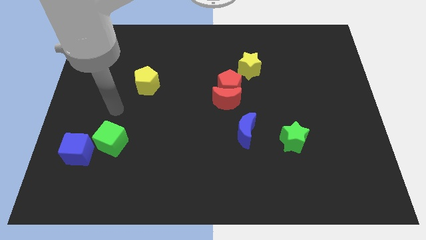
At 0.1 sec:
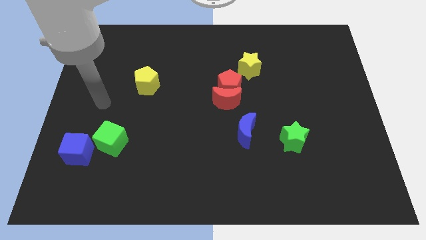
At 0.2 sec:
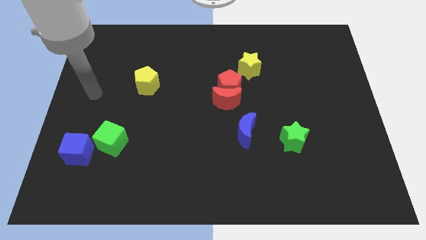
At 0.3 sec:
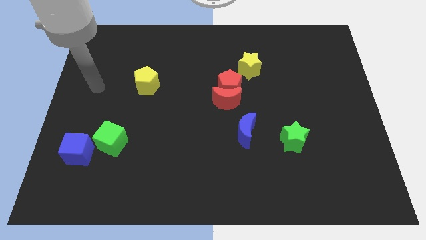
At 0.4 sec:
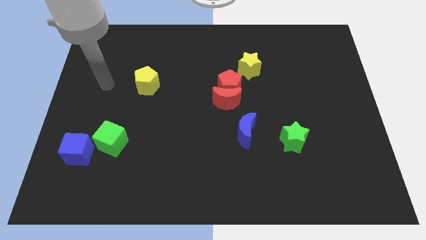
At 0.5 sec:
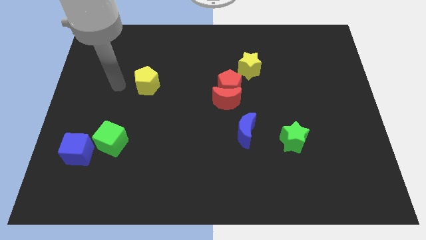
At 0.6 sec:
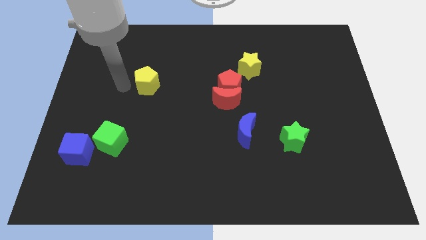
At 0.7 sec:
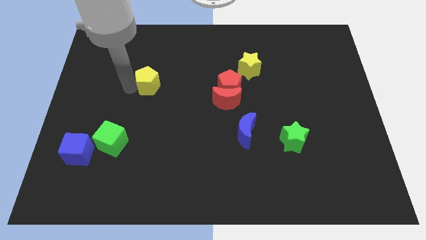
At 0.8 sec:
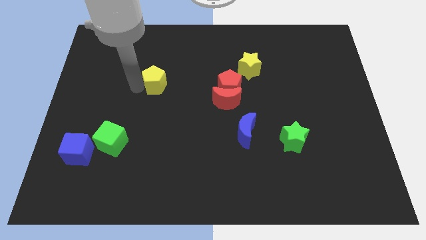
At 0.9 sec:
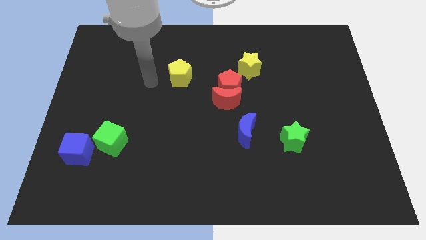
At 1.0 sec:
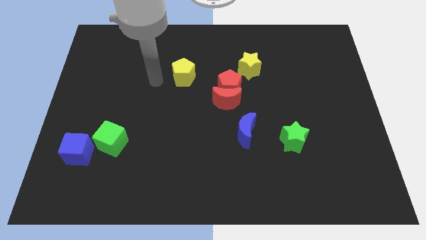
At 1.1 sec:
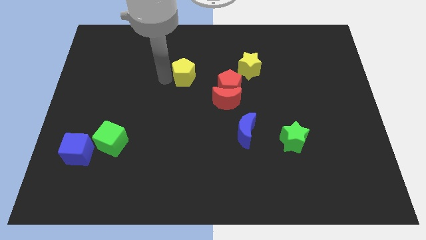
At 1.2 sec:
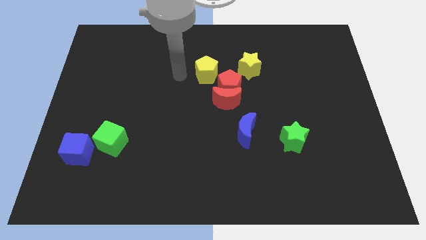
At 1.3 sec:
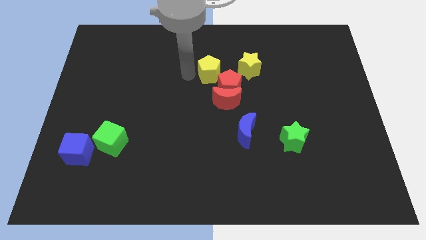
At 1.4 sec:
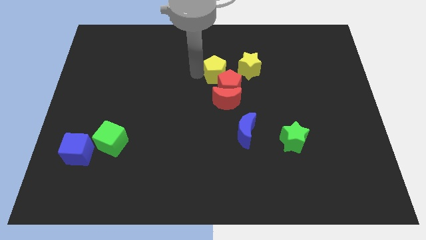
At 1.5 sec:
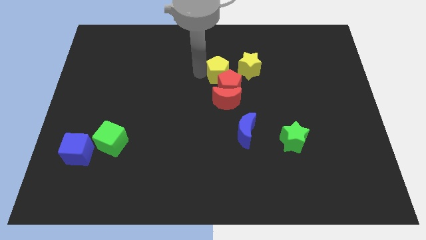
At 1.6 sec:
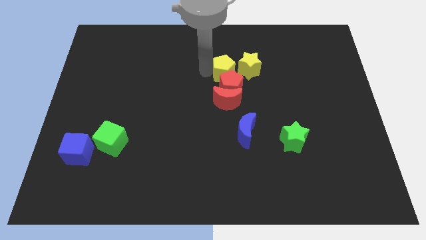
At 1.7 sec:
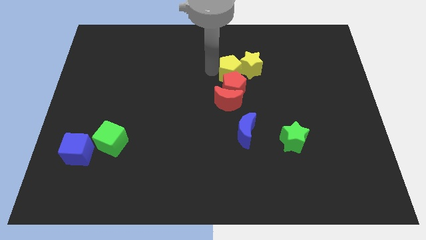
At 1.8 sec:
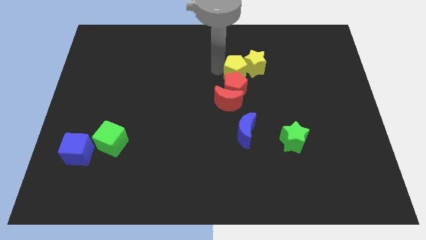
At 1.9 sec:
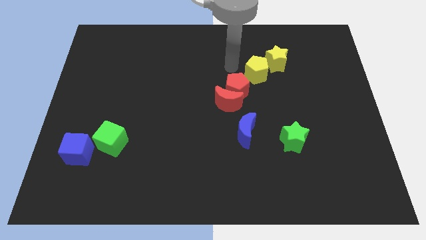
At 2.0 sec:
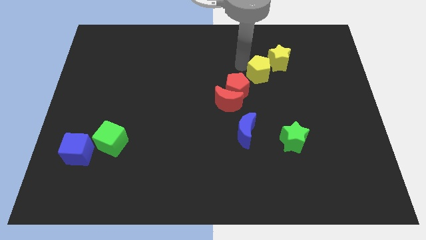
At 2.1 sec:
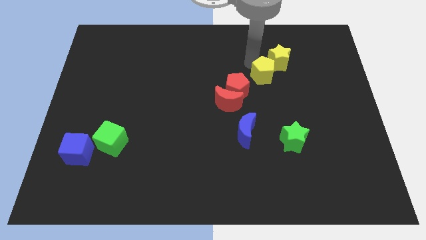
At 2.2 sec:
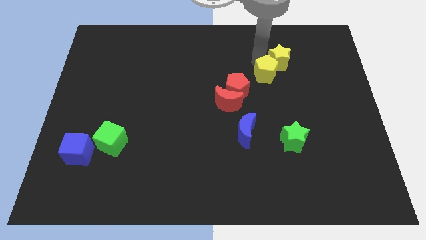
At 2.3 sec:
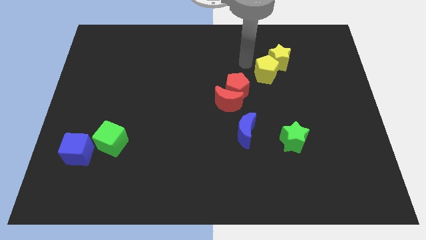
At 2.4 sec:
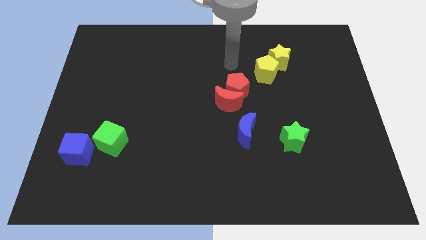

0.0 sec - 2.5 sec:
move the yellow pentagon to the bottom left of the yellow star

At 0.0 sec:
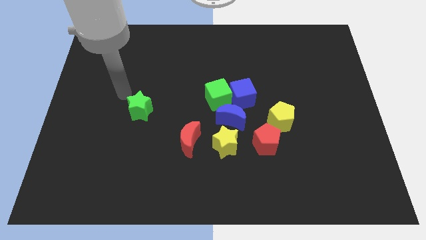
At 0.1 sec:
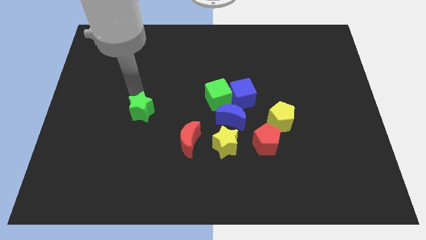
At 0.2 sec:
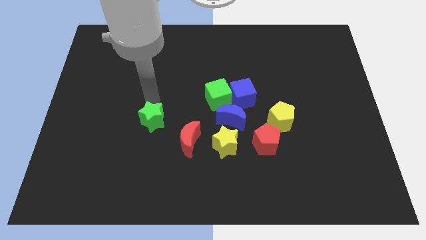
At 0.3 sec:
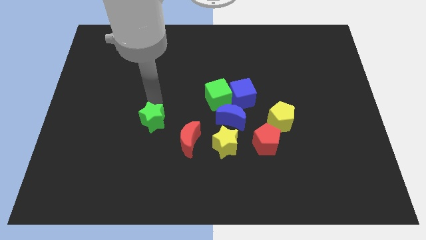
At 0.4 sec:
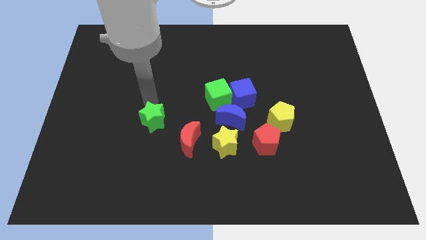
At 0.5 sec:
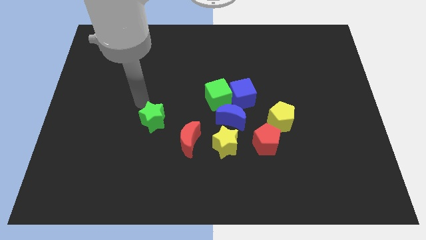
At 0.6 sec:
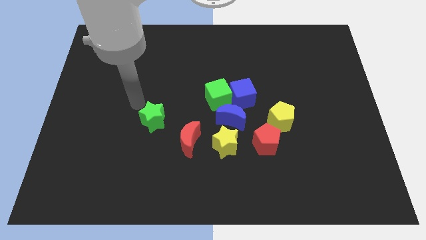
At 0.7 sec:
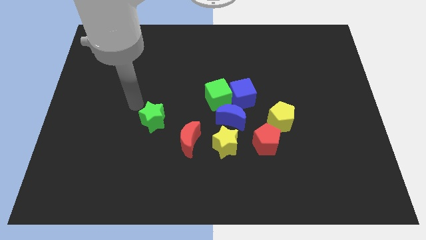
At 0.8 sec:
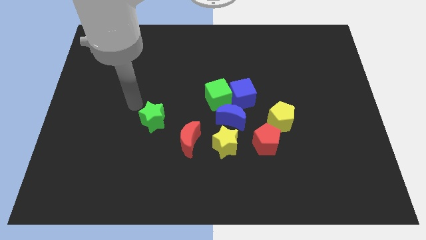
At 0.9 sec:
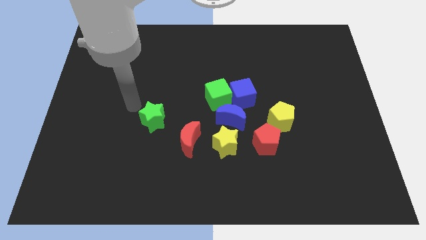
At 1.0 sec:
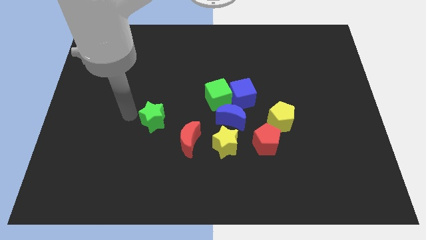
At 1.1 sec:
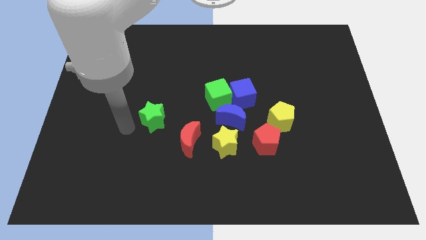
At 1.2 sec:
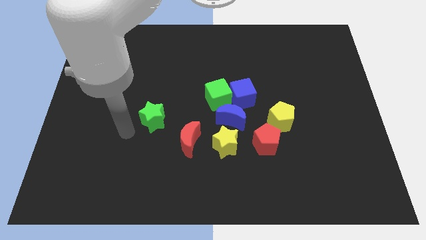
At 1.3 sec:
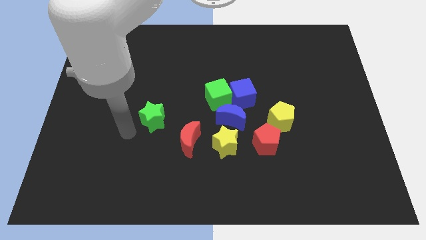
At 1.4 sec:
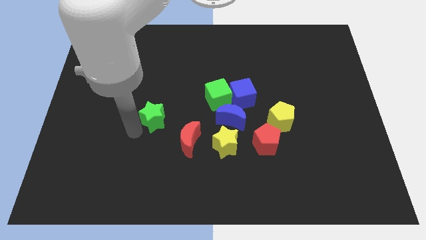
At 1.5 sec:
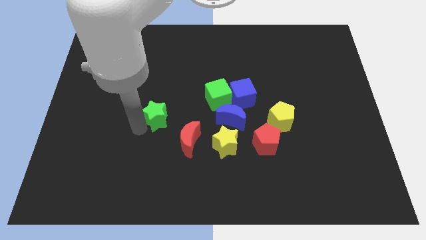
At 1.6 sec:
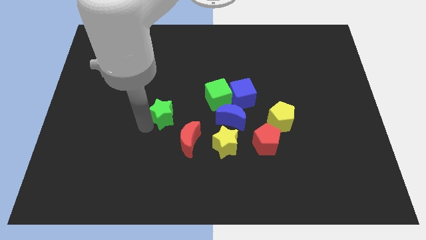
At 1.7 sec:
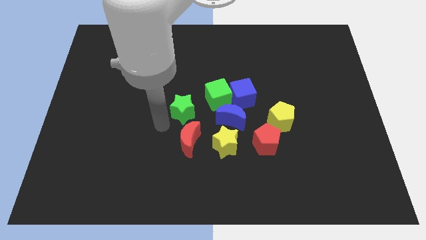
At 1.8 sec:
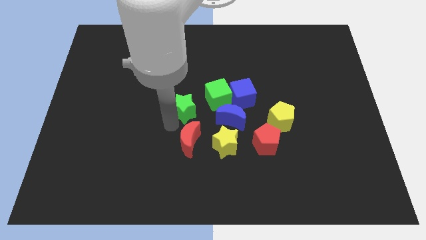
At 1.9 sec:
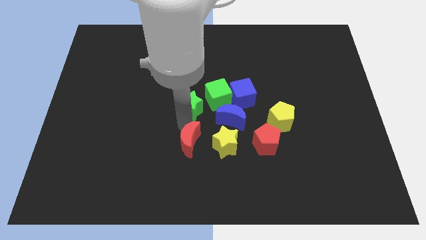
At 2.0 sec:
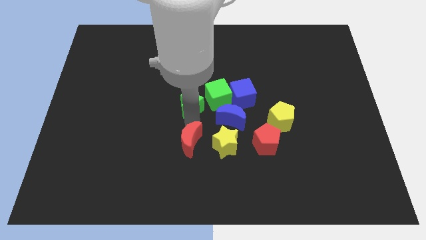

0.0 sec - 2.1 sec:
slide green star above the red moon

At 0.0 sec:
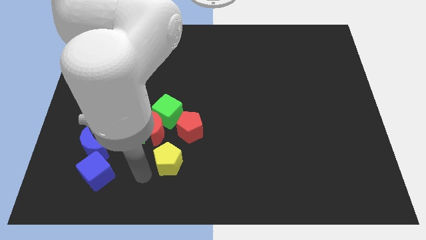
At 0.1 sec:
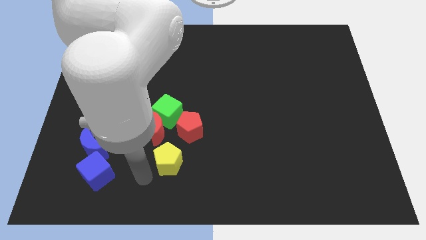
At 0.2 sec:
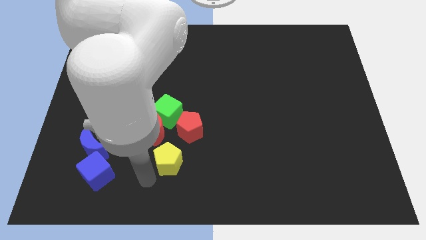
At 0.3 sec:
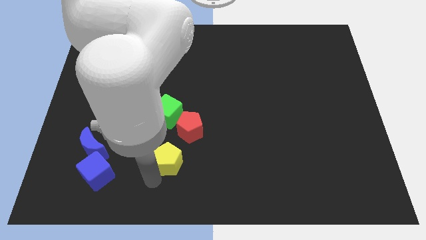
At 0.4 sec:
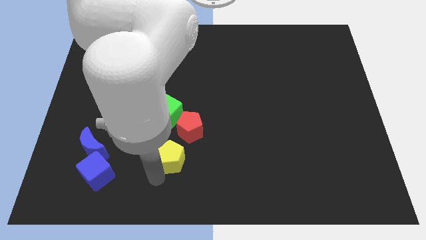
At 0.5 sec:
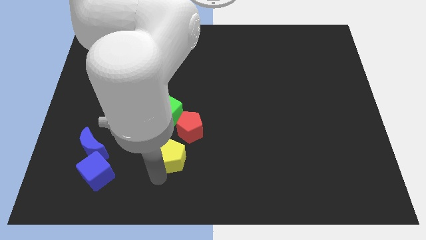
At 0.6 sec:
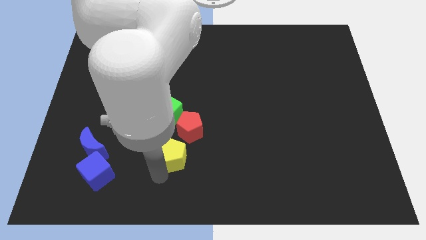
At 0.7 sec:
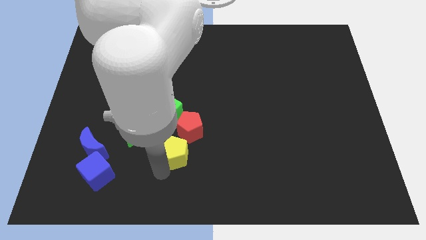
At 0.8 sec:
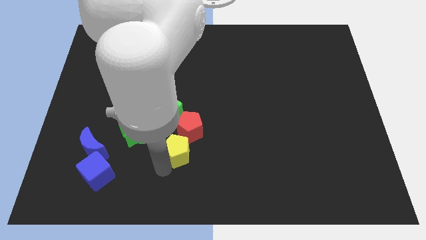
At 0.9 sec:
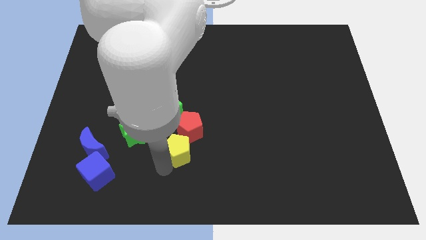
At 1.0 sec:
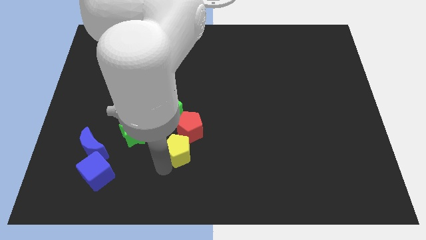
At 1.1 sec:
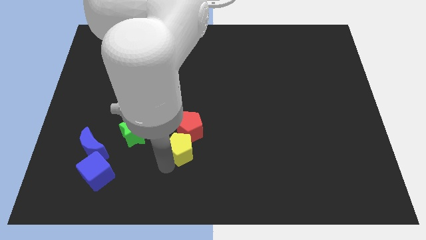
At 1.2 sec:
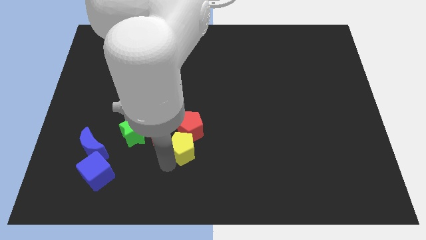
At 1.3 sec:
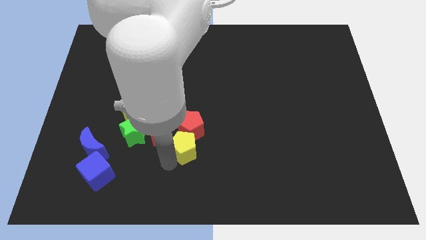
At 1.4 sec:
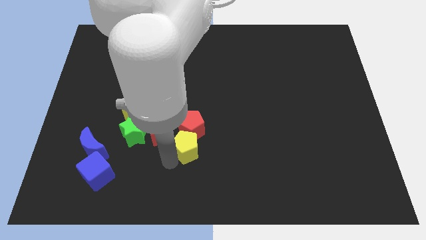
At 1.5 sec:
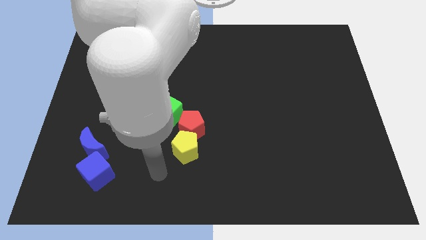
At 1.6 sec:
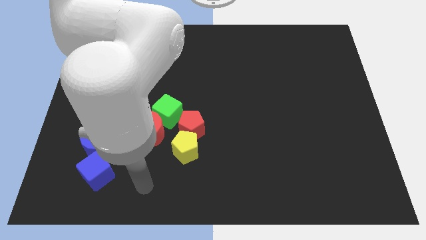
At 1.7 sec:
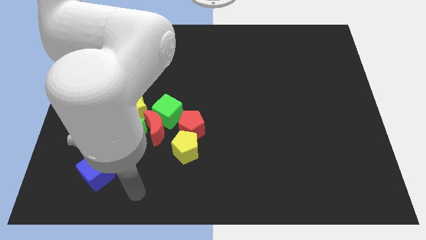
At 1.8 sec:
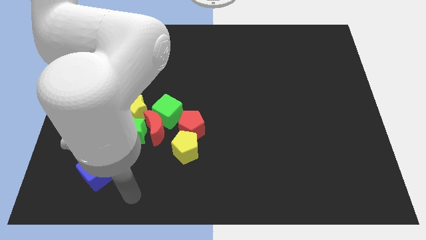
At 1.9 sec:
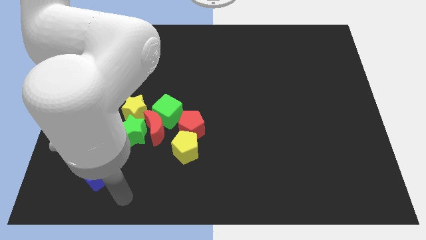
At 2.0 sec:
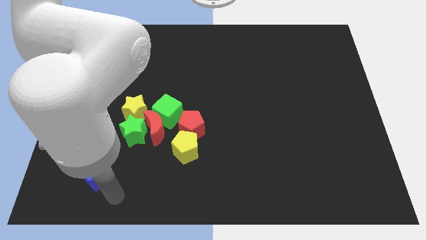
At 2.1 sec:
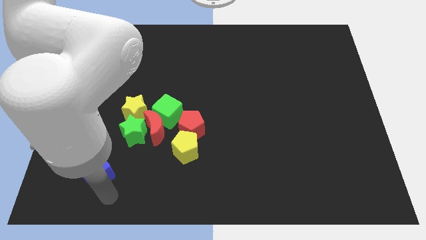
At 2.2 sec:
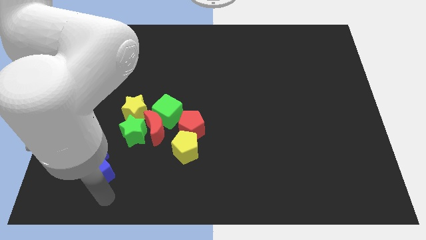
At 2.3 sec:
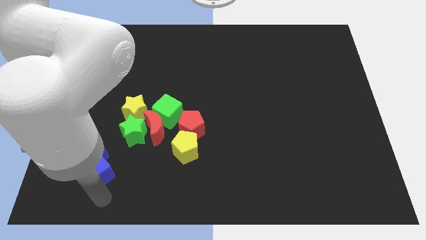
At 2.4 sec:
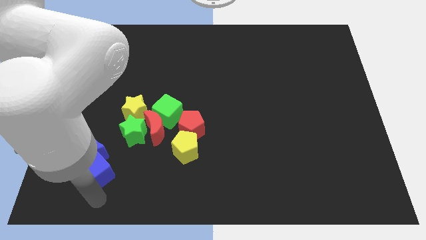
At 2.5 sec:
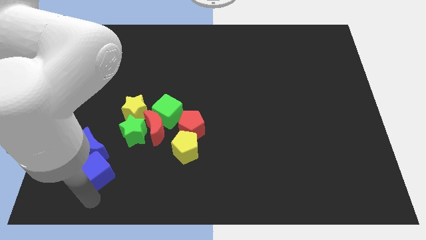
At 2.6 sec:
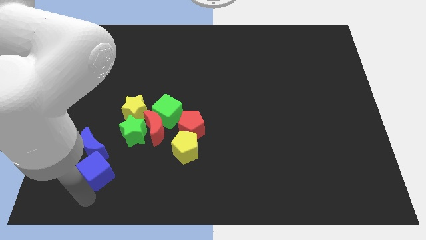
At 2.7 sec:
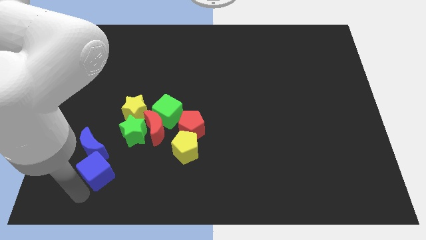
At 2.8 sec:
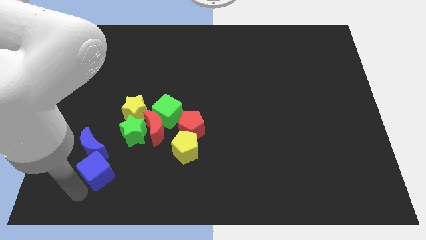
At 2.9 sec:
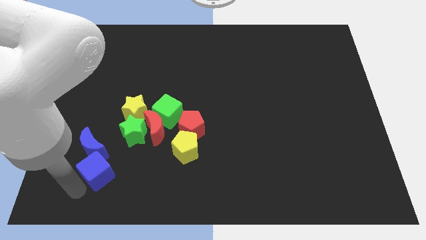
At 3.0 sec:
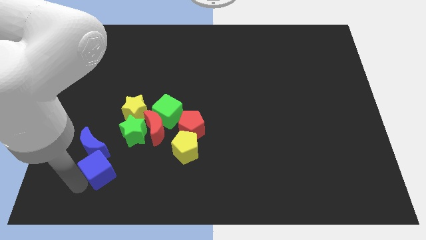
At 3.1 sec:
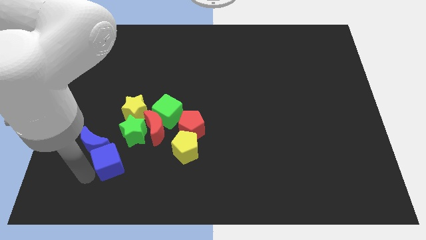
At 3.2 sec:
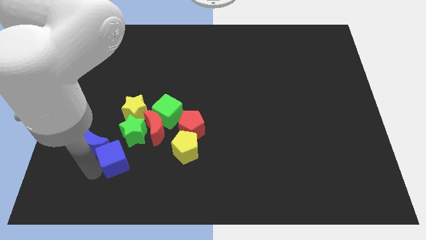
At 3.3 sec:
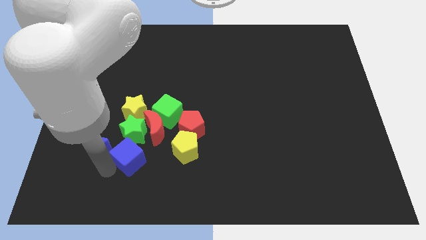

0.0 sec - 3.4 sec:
move the blue cube to the bottom side of the green star

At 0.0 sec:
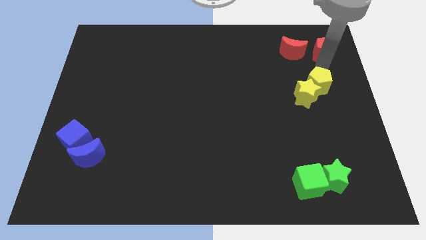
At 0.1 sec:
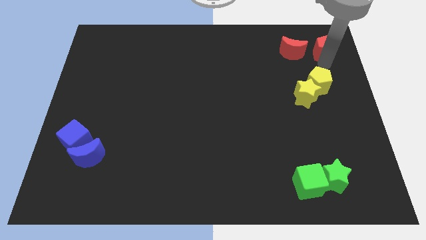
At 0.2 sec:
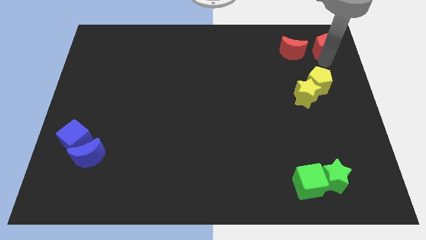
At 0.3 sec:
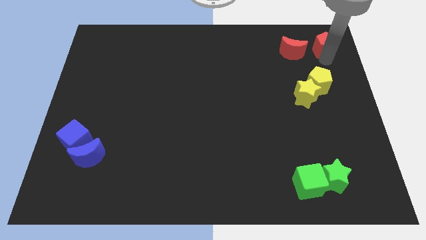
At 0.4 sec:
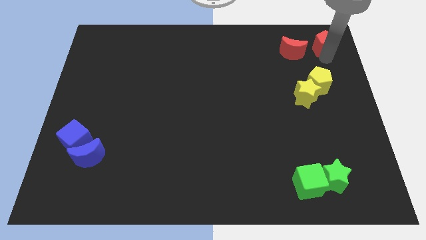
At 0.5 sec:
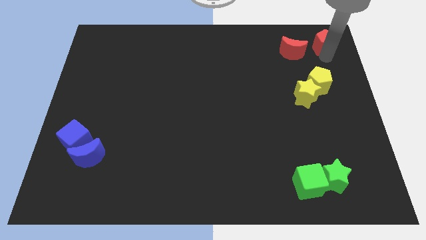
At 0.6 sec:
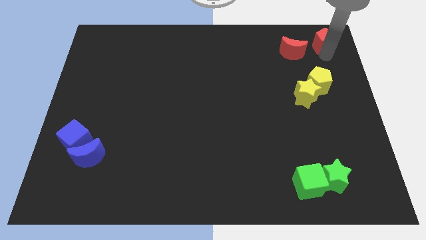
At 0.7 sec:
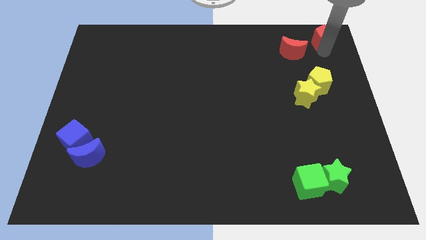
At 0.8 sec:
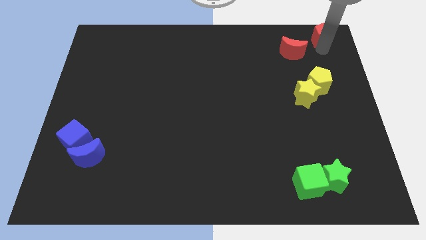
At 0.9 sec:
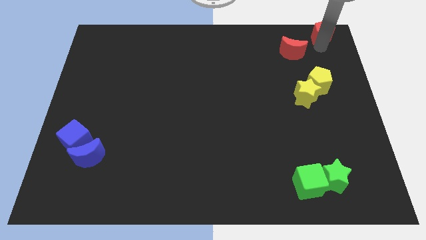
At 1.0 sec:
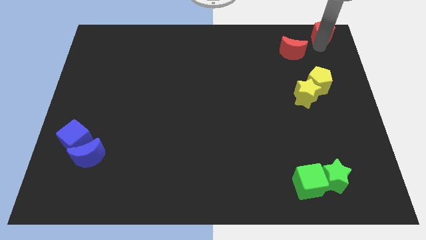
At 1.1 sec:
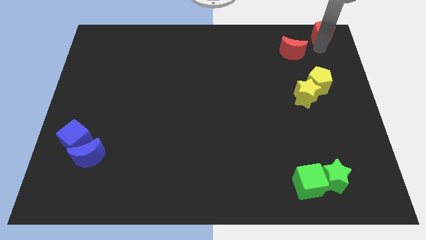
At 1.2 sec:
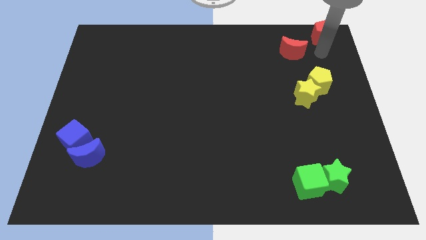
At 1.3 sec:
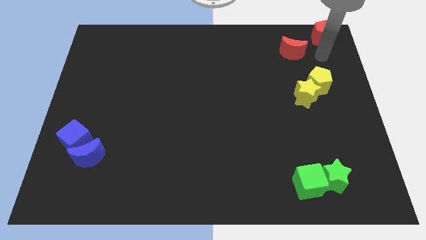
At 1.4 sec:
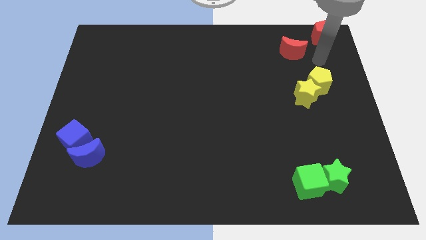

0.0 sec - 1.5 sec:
move the red pentagon towards the top right of the board
